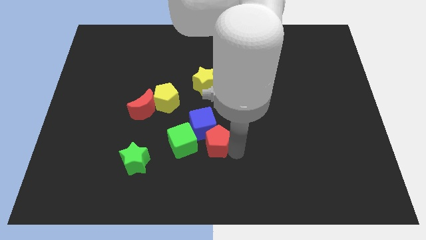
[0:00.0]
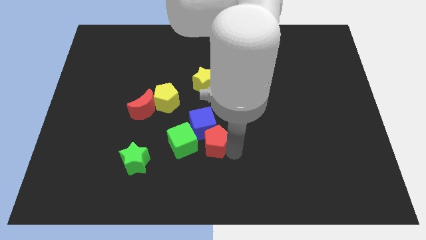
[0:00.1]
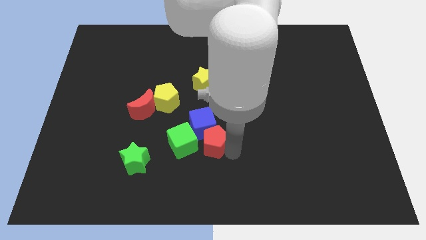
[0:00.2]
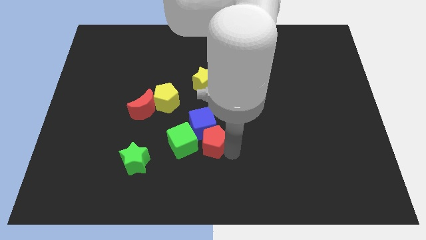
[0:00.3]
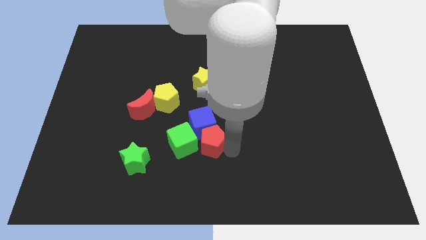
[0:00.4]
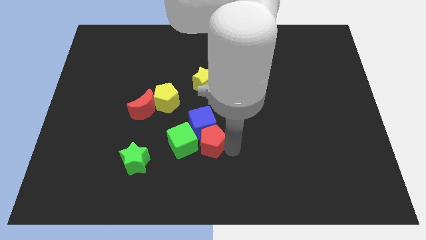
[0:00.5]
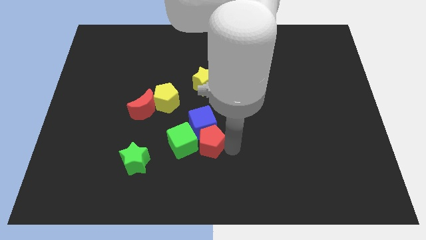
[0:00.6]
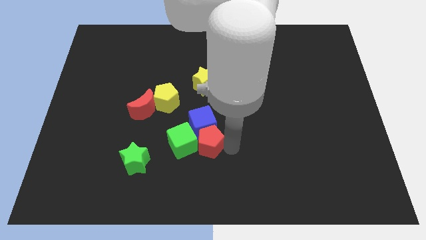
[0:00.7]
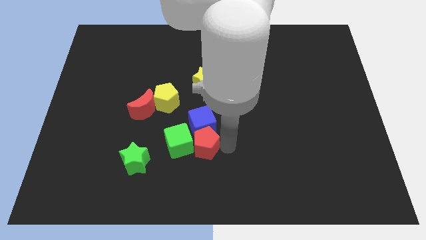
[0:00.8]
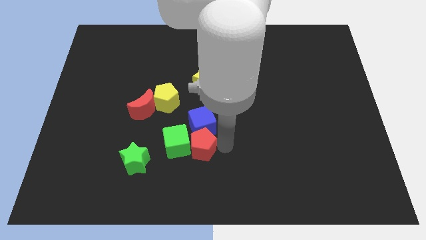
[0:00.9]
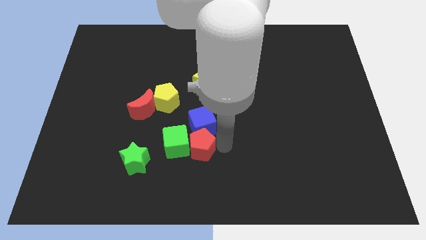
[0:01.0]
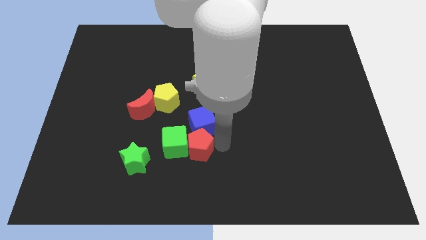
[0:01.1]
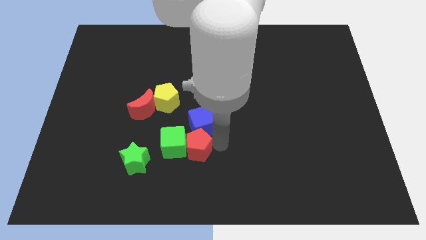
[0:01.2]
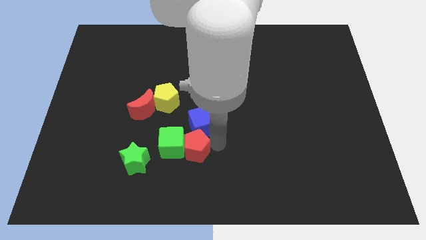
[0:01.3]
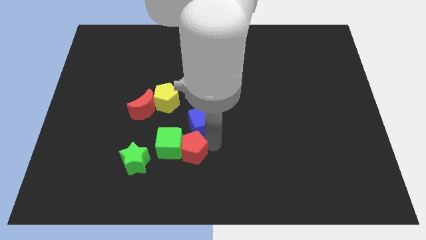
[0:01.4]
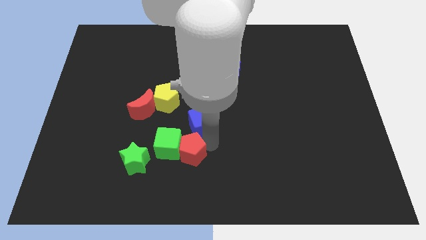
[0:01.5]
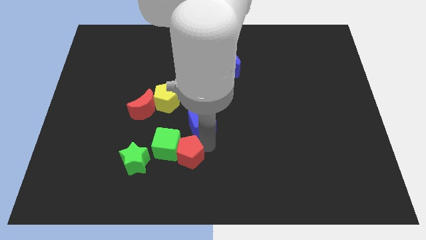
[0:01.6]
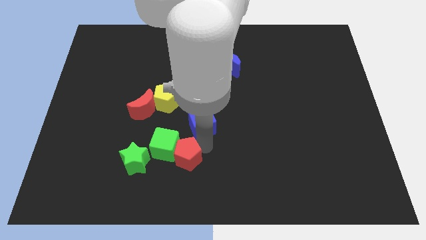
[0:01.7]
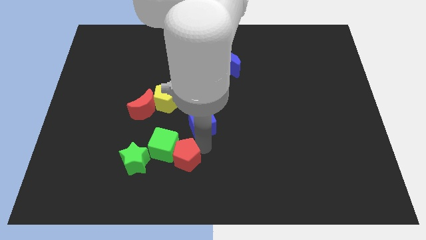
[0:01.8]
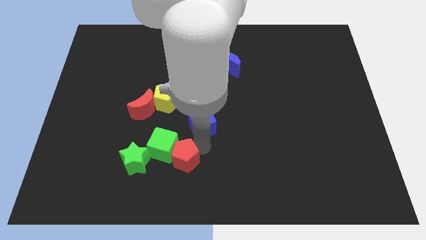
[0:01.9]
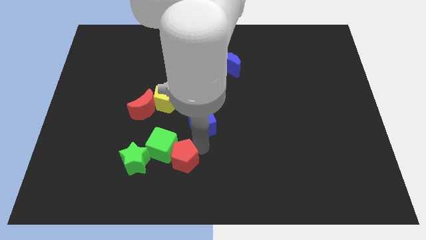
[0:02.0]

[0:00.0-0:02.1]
move the red pentagon close to green cube

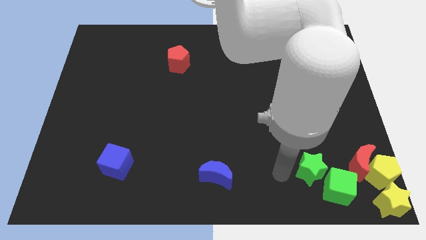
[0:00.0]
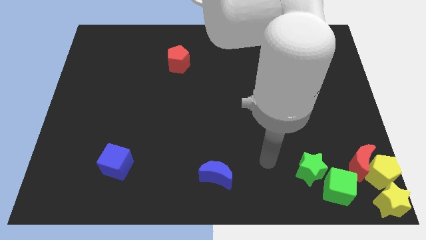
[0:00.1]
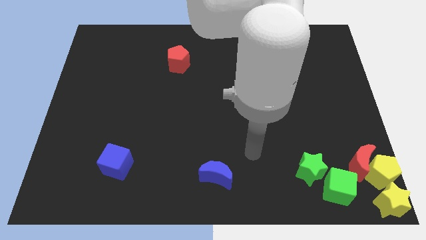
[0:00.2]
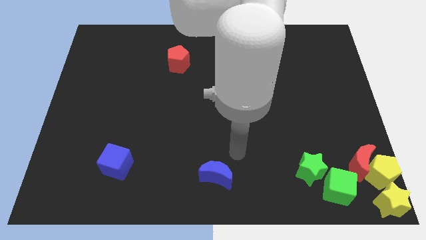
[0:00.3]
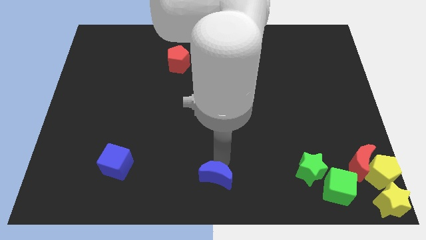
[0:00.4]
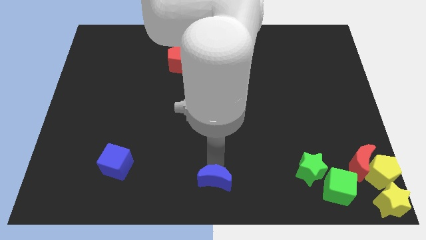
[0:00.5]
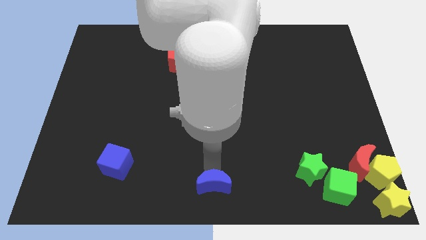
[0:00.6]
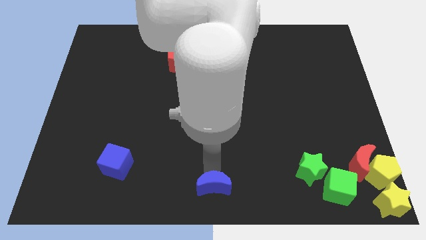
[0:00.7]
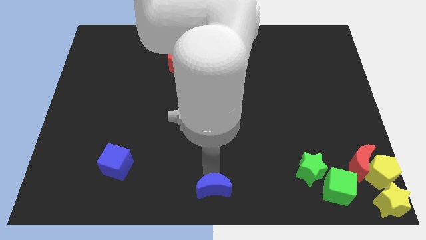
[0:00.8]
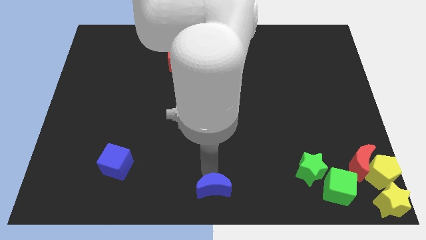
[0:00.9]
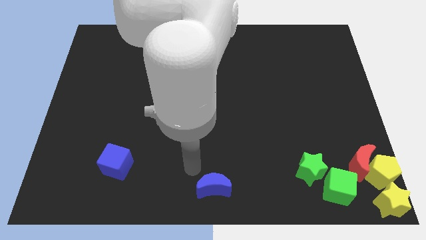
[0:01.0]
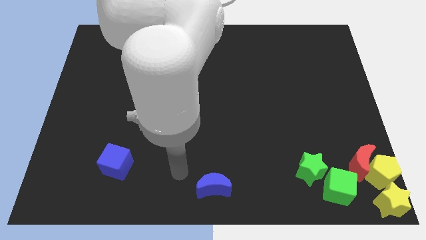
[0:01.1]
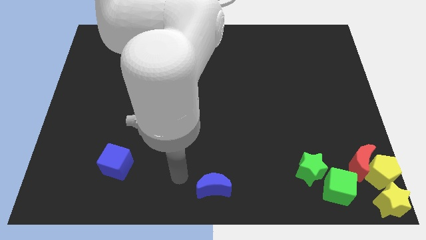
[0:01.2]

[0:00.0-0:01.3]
push the blue crescent slightly to the bottom

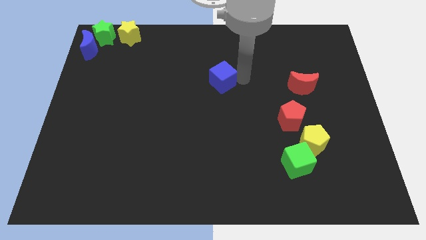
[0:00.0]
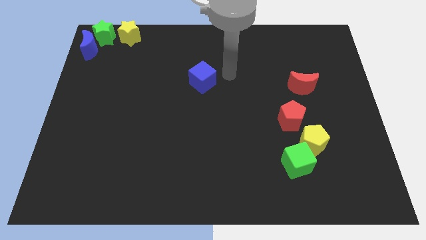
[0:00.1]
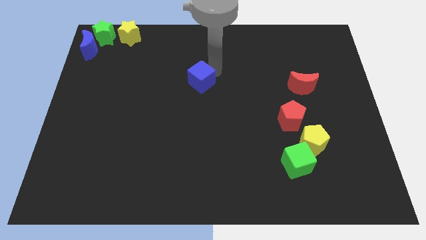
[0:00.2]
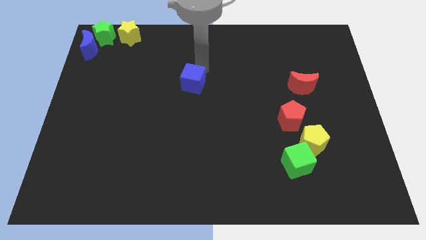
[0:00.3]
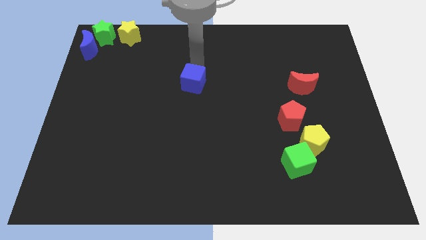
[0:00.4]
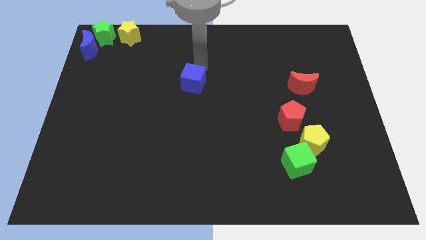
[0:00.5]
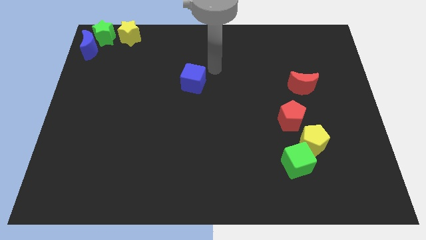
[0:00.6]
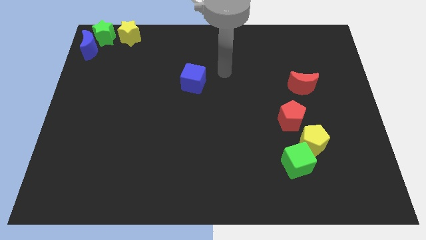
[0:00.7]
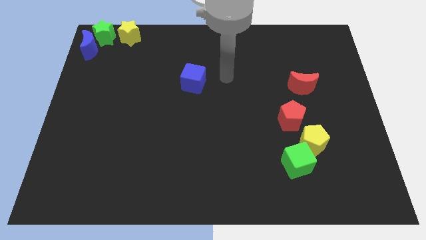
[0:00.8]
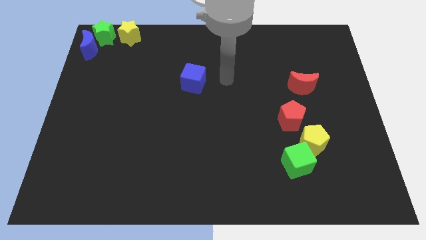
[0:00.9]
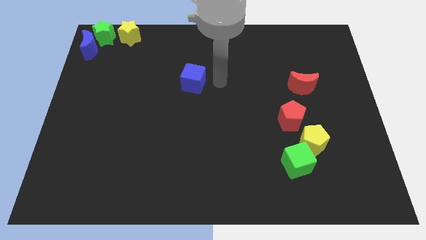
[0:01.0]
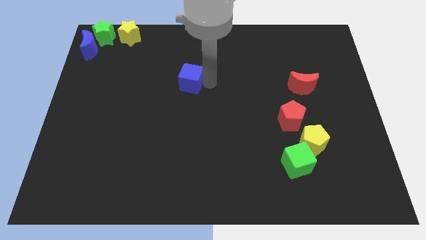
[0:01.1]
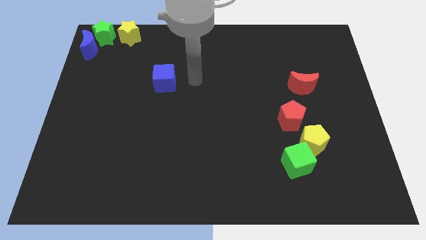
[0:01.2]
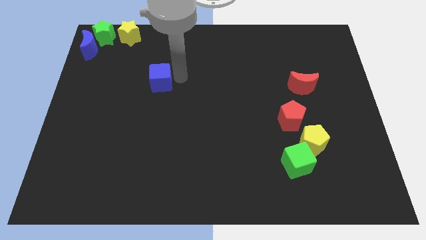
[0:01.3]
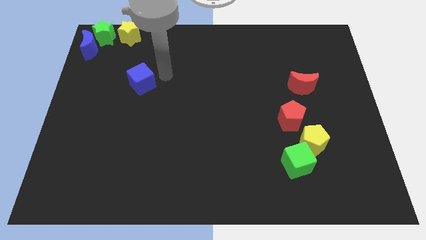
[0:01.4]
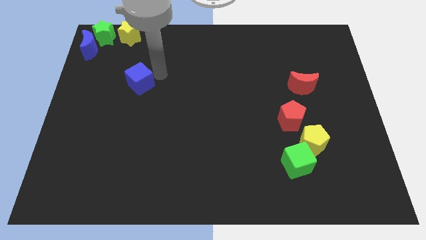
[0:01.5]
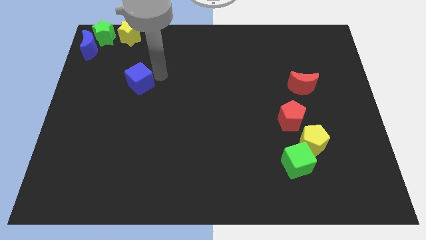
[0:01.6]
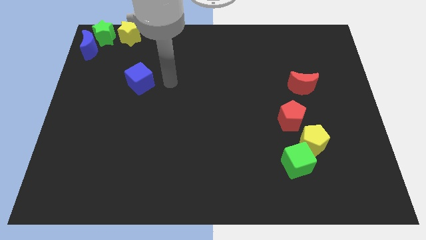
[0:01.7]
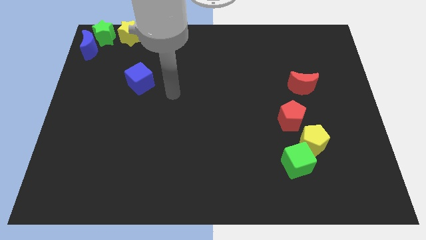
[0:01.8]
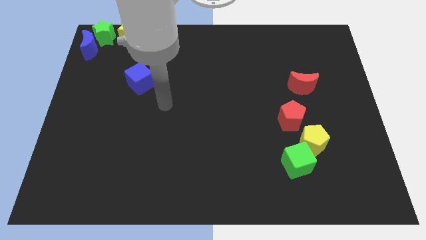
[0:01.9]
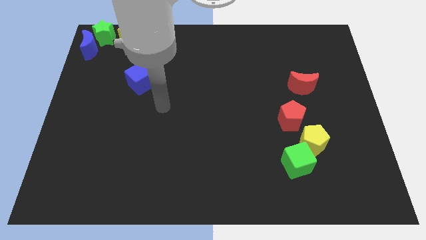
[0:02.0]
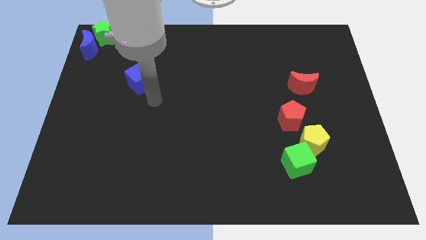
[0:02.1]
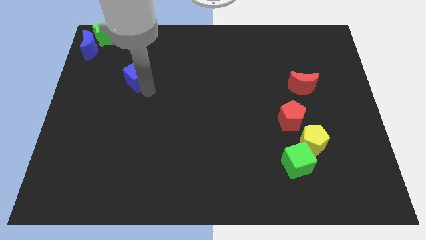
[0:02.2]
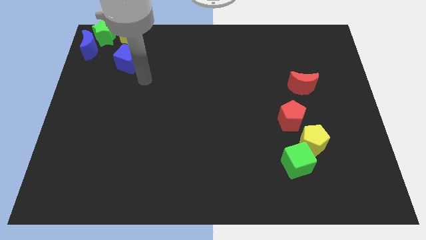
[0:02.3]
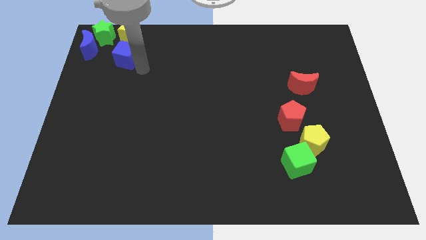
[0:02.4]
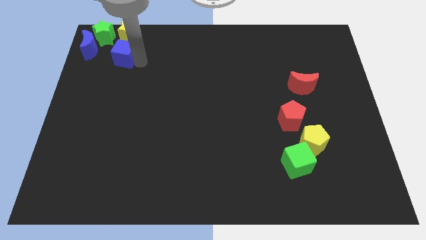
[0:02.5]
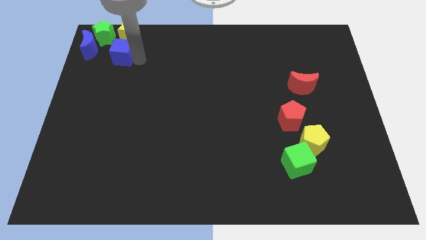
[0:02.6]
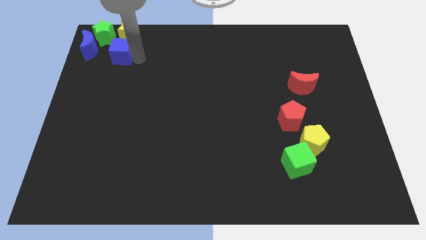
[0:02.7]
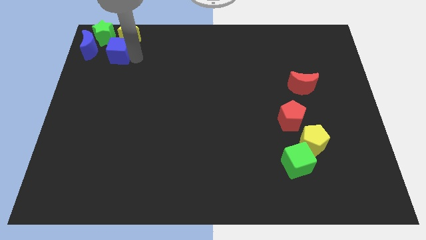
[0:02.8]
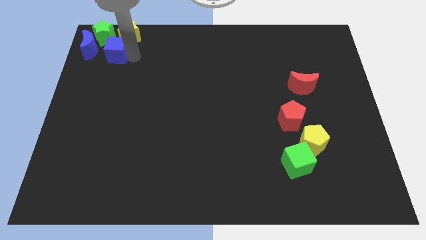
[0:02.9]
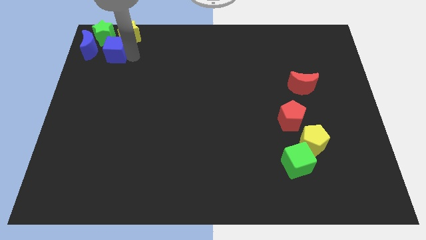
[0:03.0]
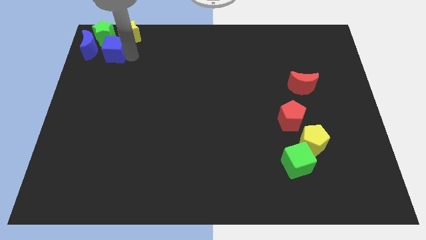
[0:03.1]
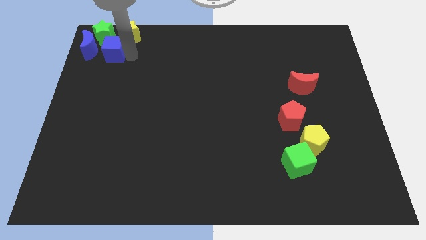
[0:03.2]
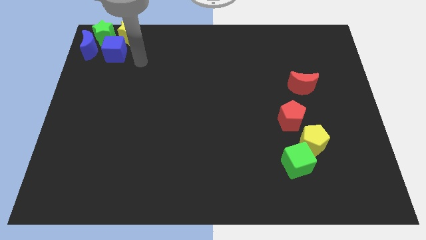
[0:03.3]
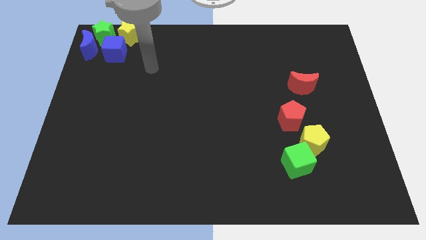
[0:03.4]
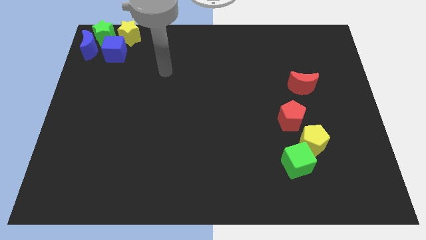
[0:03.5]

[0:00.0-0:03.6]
place blue block down to the green star

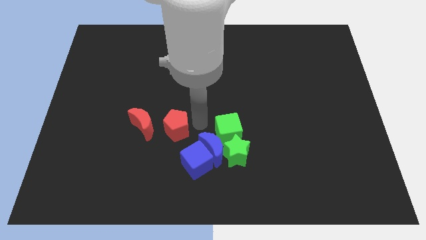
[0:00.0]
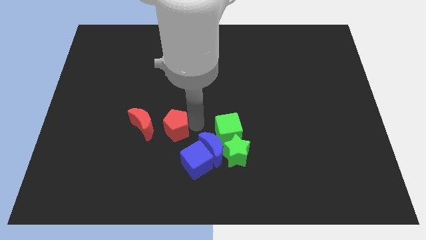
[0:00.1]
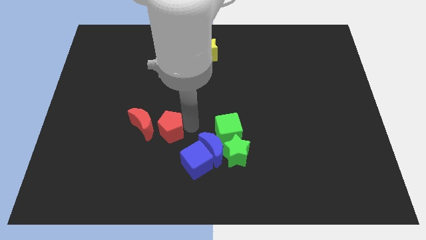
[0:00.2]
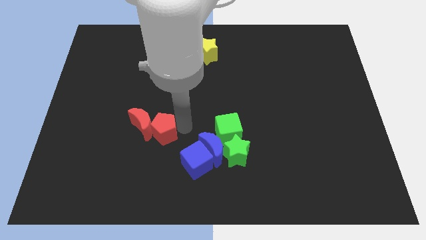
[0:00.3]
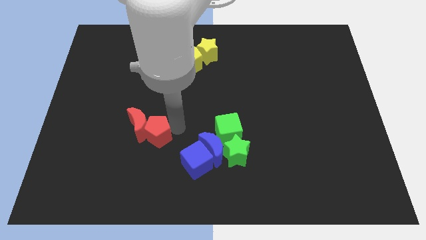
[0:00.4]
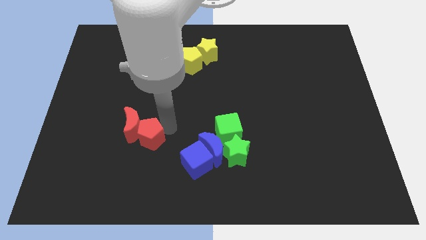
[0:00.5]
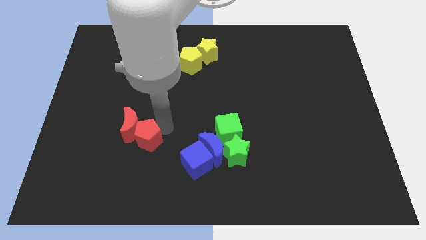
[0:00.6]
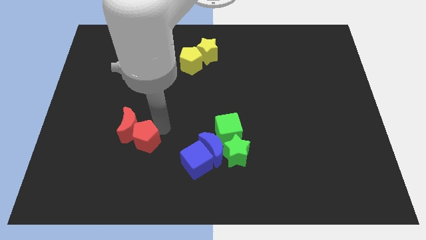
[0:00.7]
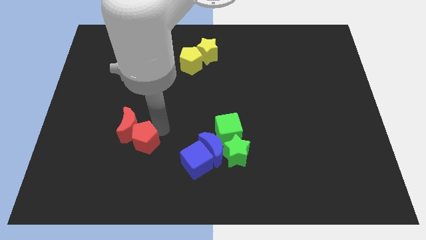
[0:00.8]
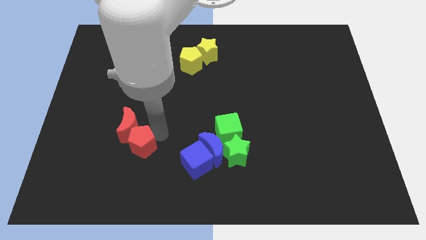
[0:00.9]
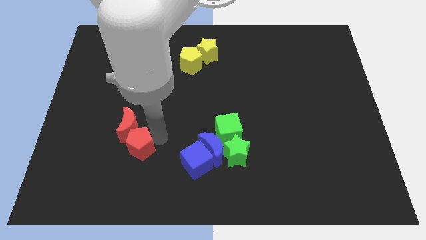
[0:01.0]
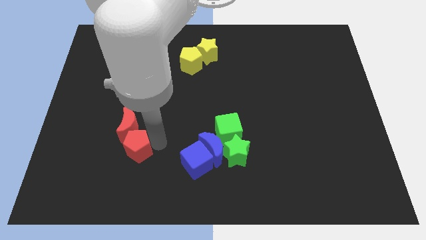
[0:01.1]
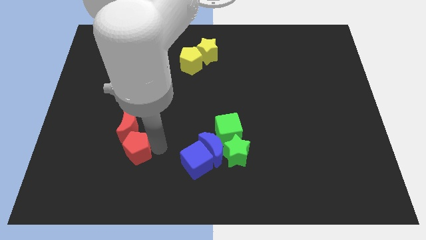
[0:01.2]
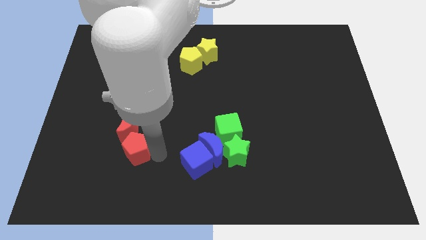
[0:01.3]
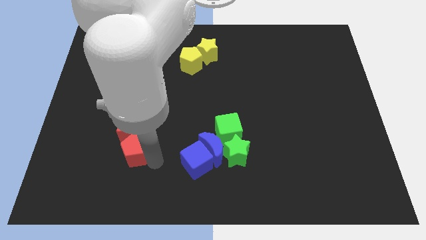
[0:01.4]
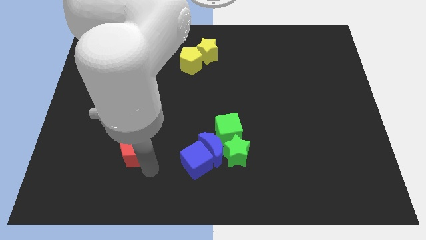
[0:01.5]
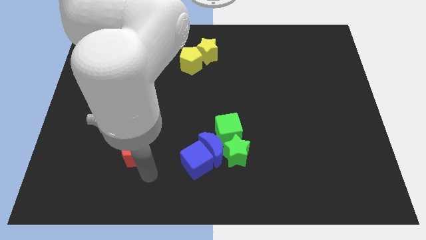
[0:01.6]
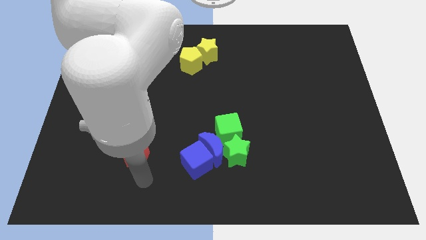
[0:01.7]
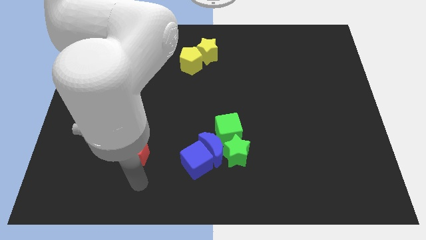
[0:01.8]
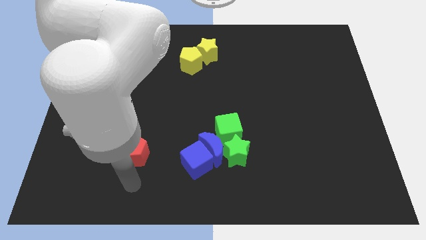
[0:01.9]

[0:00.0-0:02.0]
move the red pentagon to the bottom of the red crescent
